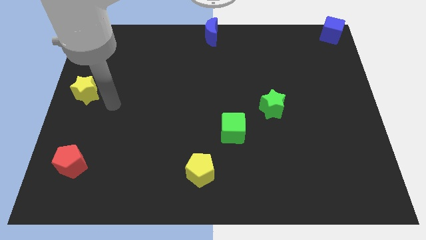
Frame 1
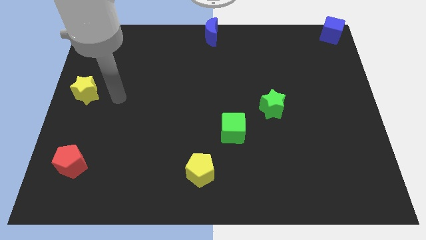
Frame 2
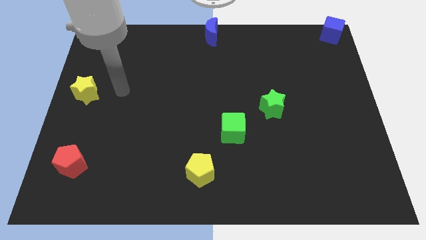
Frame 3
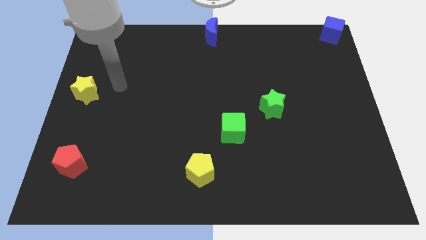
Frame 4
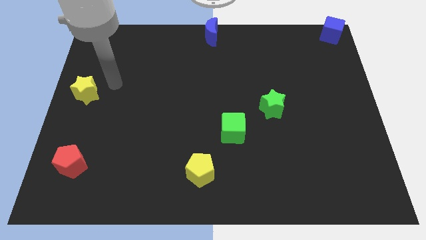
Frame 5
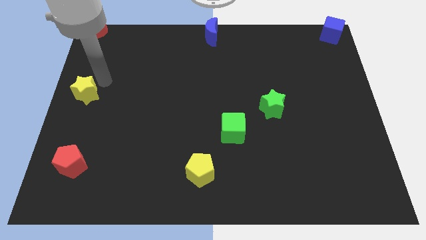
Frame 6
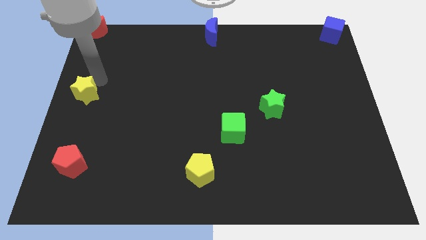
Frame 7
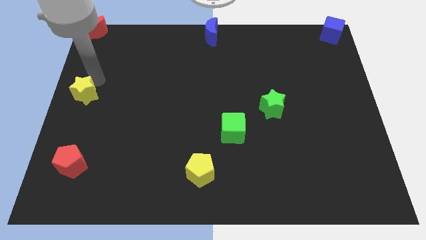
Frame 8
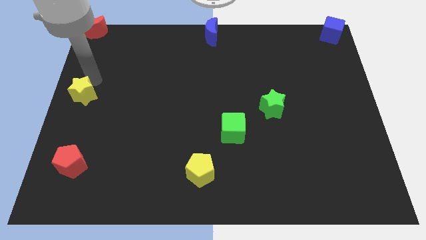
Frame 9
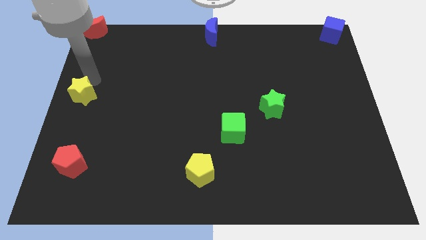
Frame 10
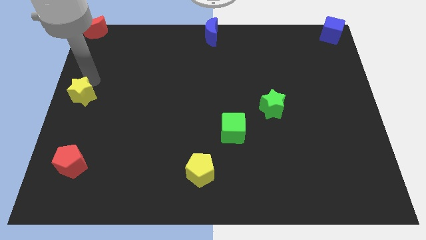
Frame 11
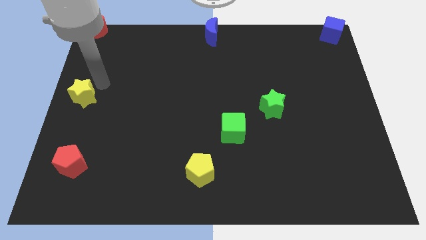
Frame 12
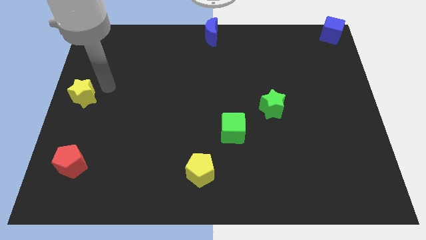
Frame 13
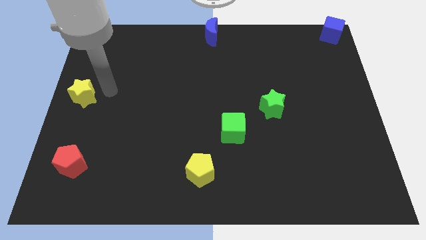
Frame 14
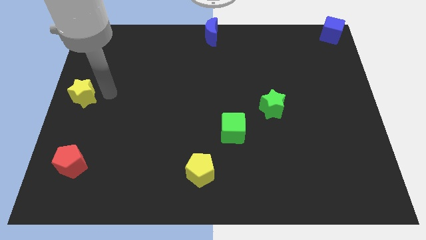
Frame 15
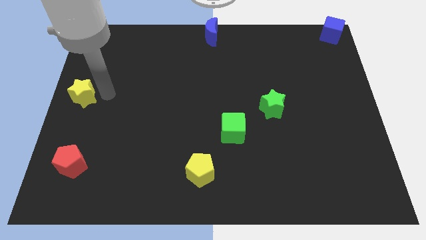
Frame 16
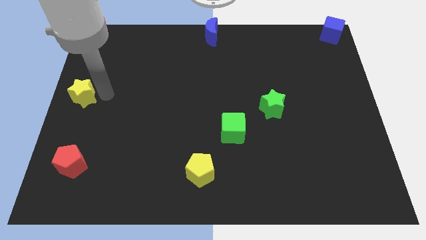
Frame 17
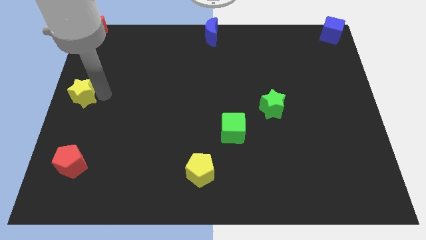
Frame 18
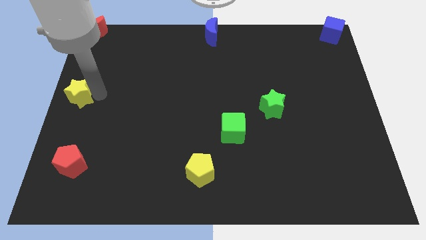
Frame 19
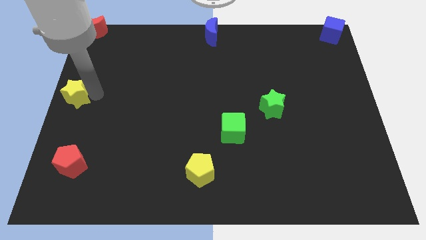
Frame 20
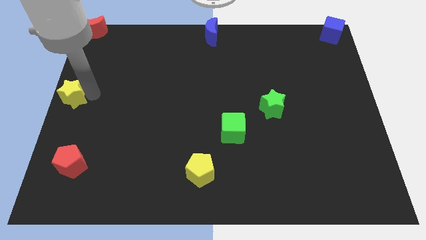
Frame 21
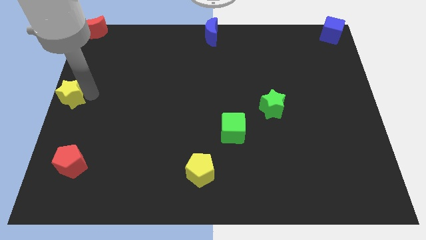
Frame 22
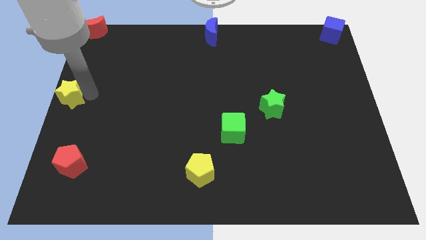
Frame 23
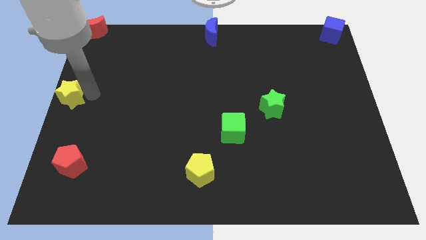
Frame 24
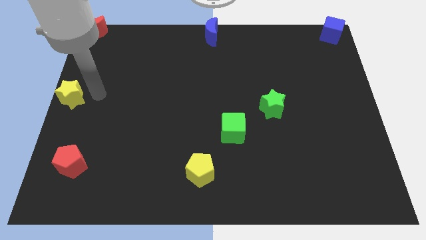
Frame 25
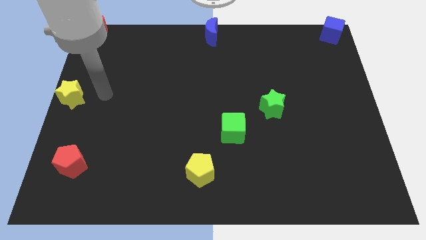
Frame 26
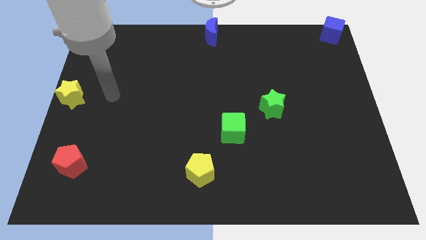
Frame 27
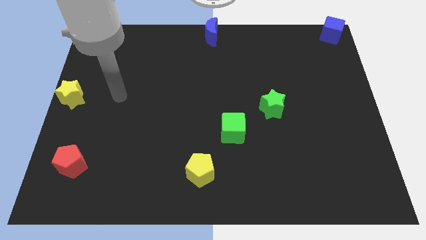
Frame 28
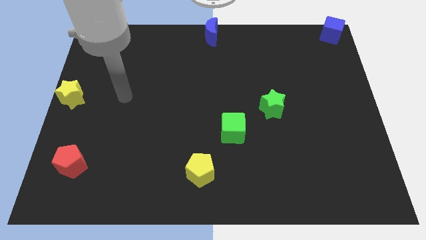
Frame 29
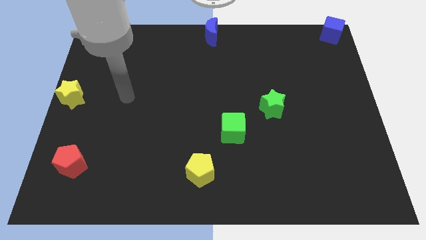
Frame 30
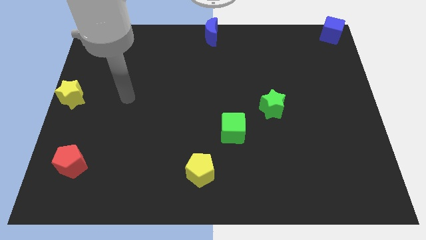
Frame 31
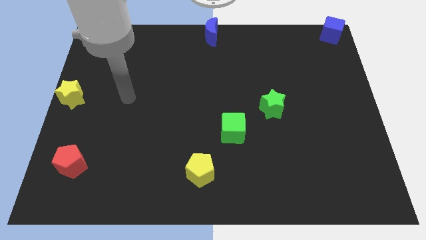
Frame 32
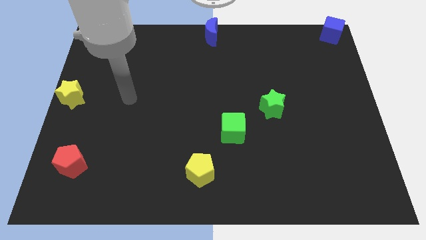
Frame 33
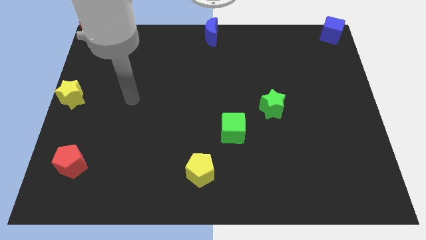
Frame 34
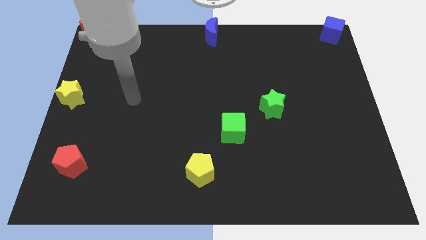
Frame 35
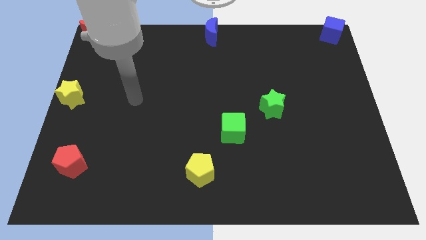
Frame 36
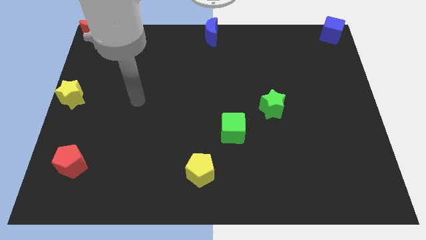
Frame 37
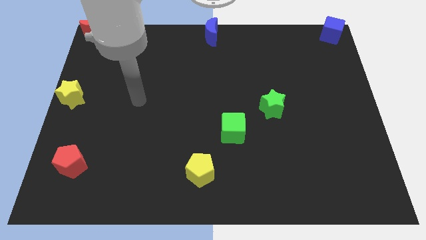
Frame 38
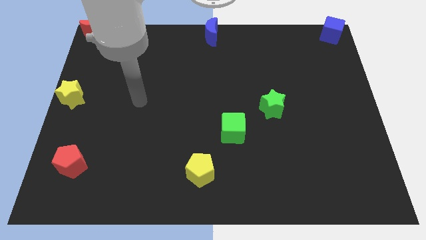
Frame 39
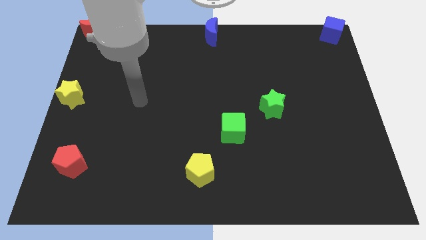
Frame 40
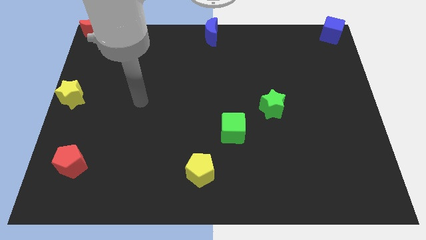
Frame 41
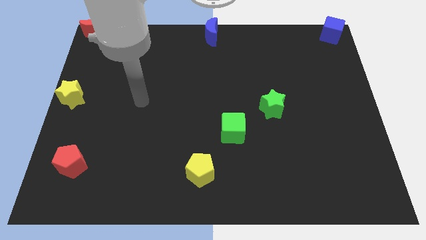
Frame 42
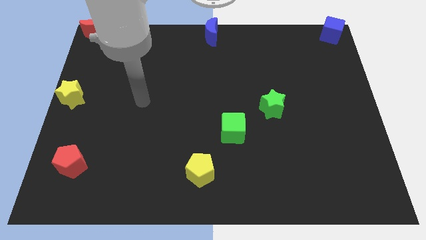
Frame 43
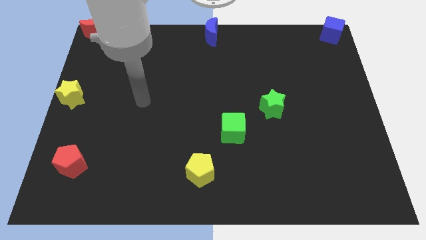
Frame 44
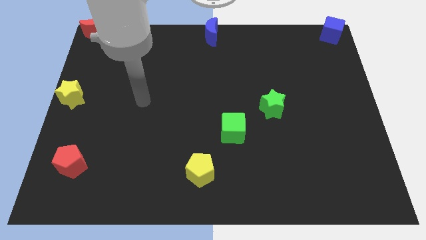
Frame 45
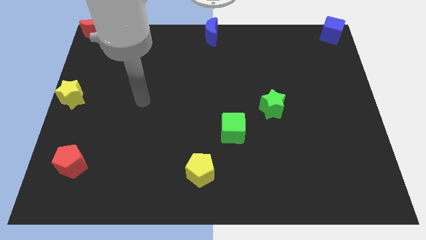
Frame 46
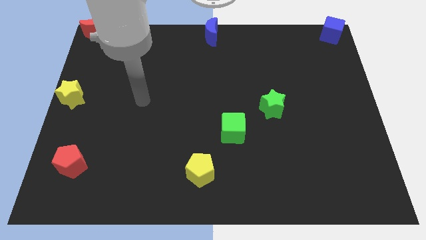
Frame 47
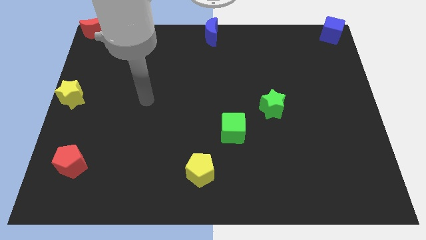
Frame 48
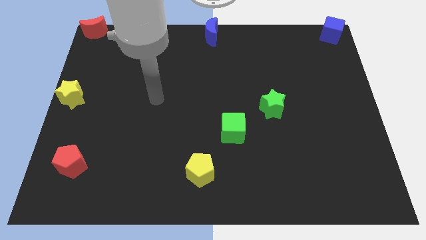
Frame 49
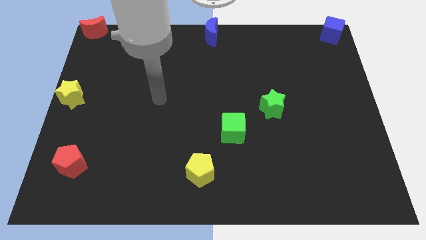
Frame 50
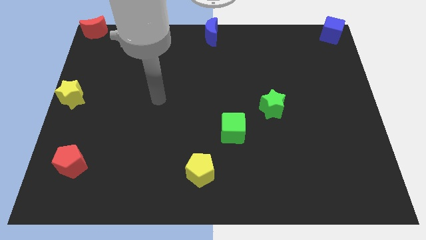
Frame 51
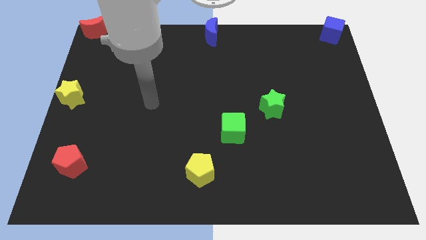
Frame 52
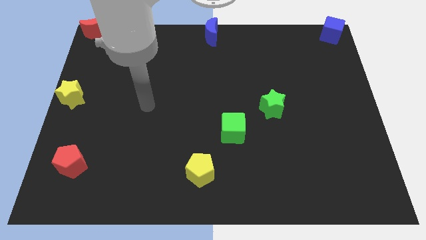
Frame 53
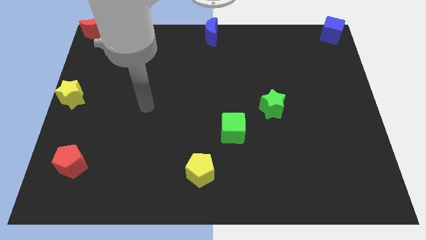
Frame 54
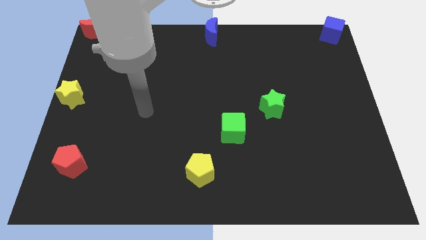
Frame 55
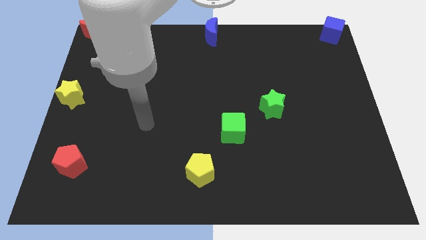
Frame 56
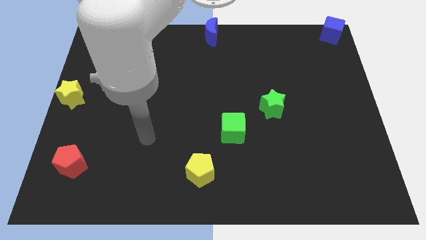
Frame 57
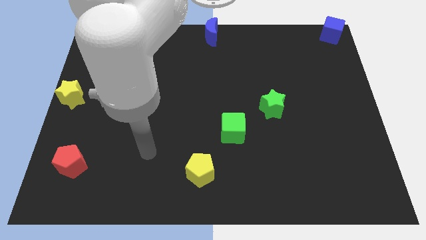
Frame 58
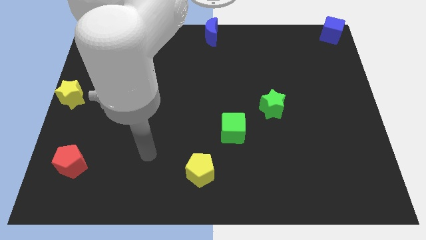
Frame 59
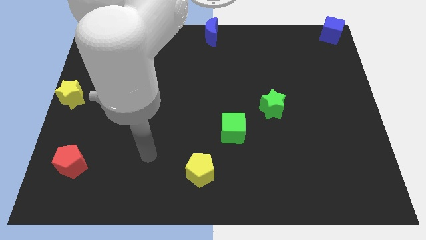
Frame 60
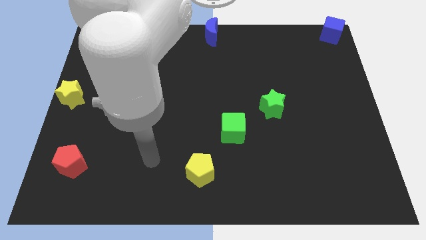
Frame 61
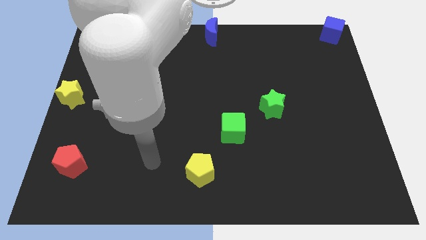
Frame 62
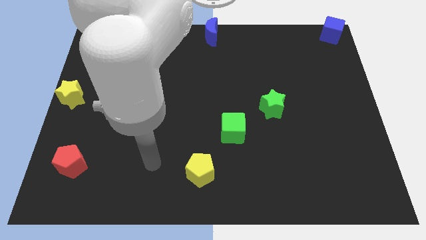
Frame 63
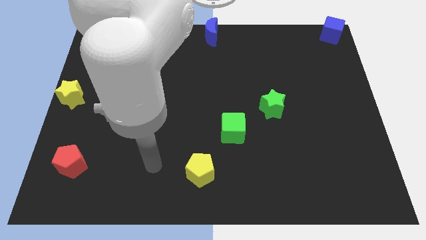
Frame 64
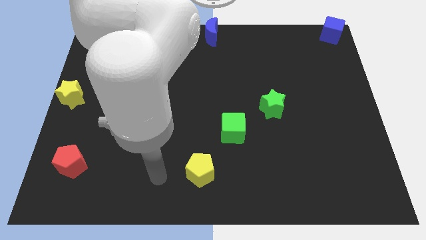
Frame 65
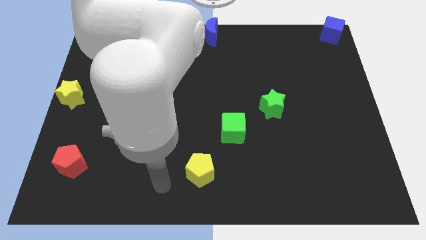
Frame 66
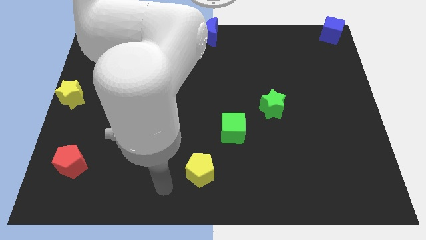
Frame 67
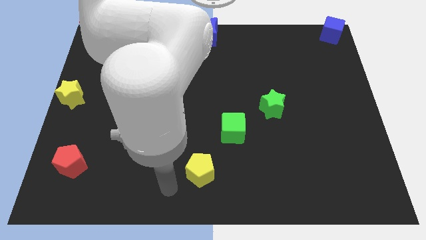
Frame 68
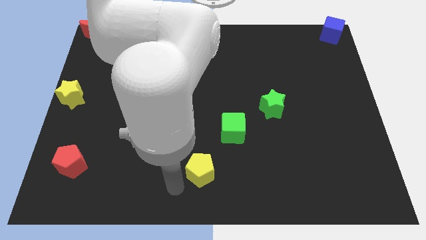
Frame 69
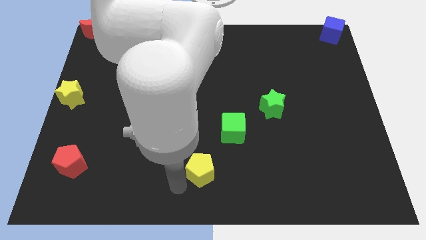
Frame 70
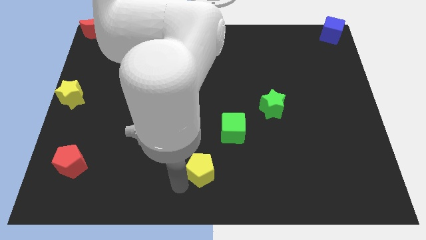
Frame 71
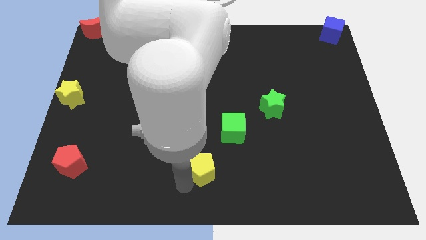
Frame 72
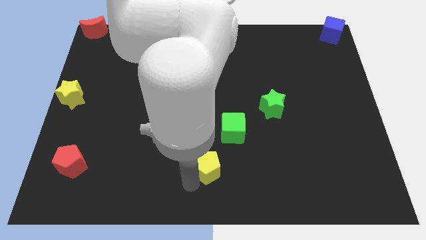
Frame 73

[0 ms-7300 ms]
point your arm beside yellow pentagon

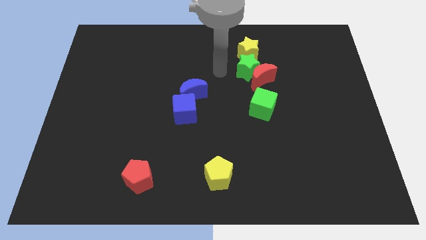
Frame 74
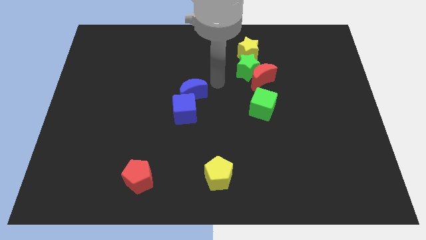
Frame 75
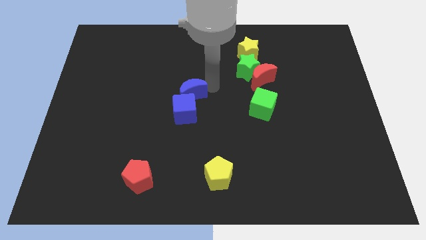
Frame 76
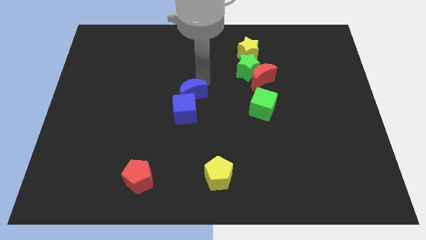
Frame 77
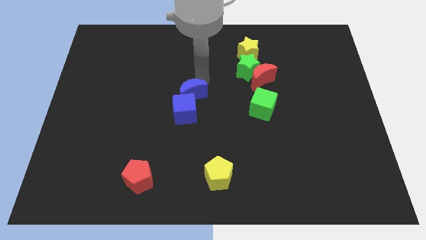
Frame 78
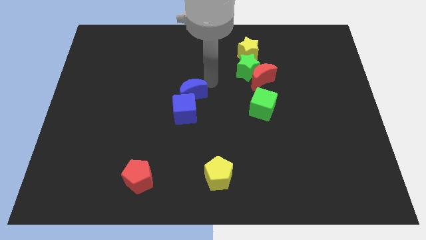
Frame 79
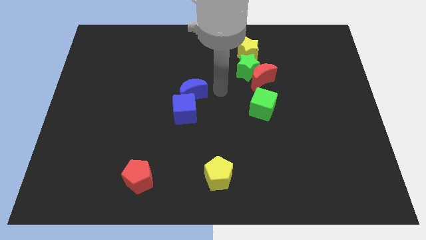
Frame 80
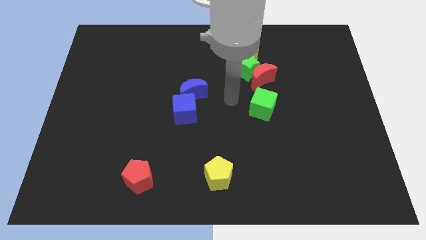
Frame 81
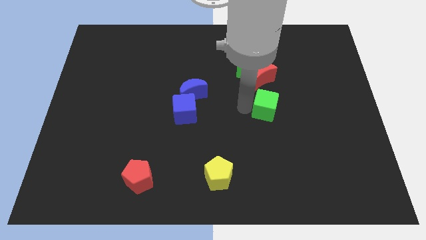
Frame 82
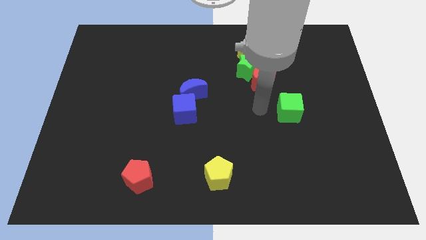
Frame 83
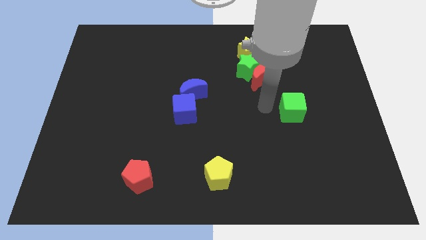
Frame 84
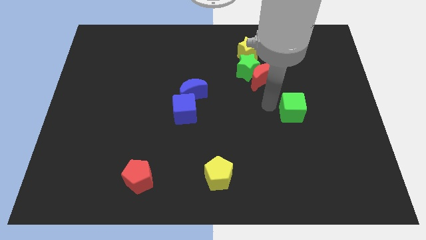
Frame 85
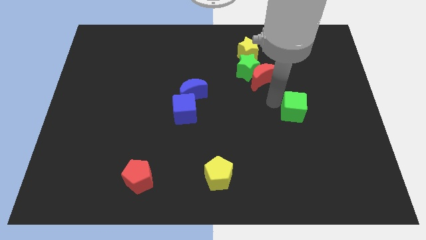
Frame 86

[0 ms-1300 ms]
push the green cube to the right side

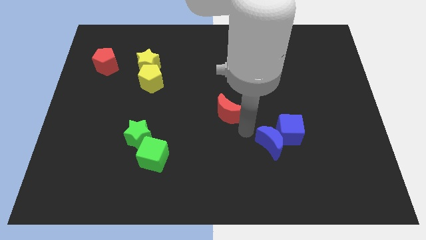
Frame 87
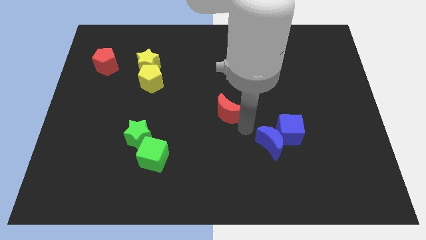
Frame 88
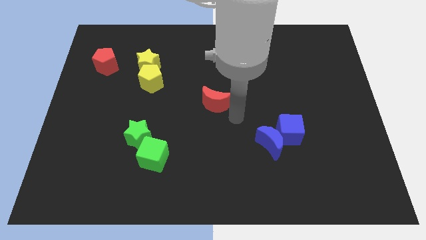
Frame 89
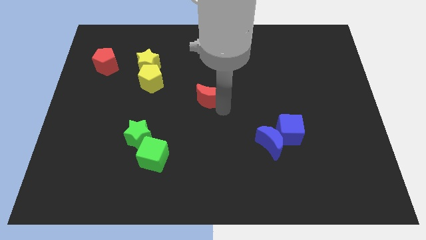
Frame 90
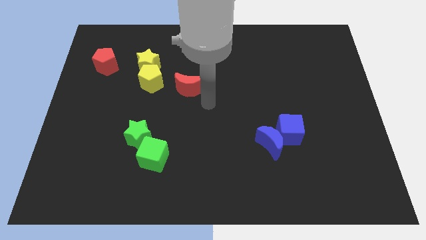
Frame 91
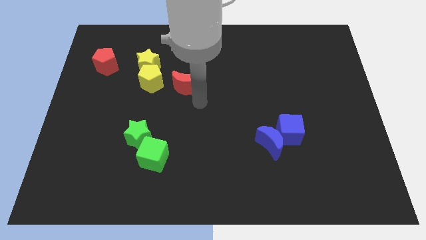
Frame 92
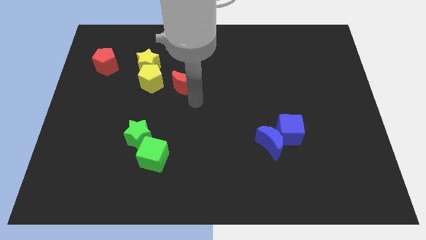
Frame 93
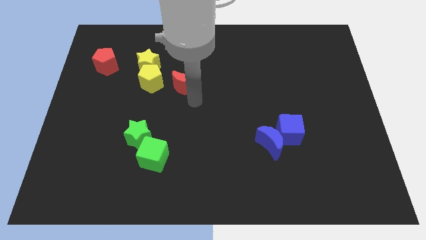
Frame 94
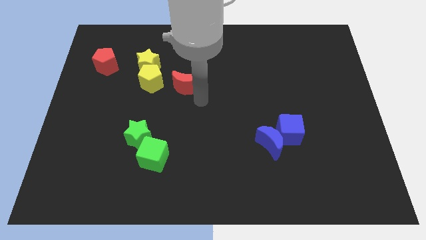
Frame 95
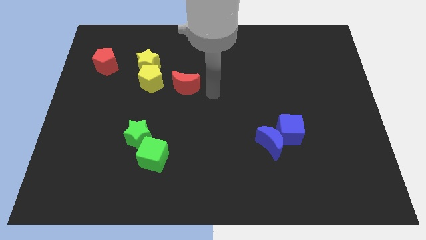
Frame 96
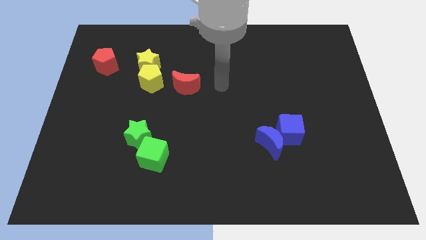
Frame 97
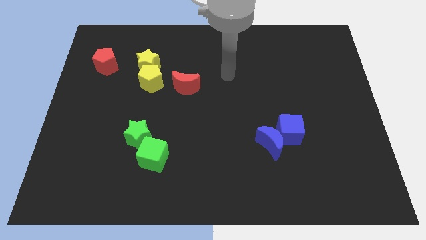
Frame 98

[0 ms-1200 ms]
place the red crescent horizontal to the right of the yellow pentagon
